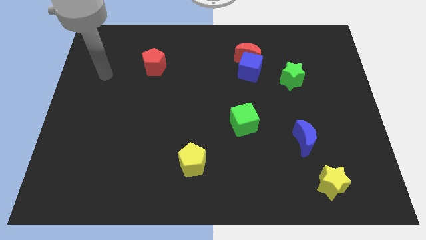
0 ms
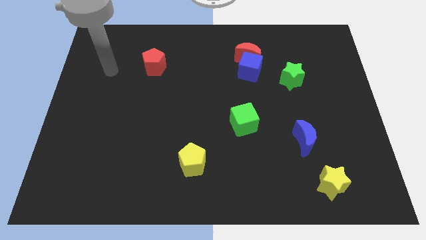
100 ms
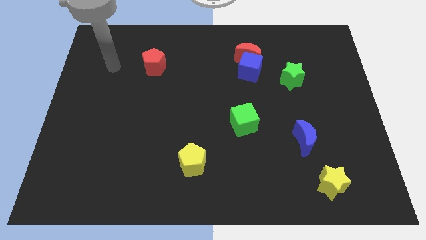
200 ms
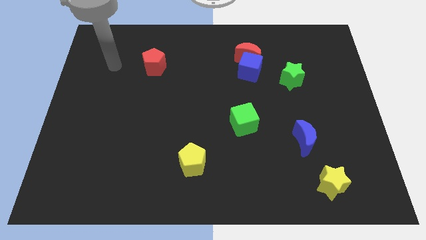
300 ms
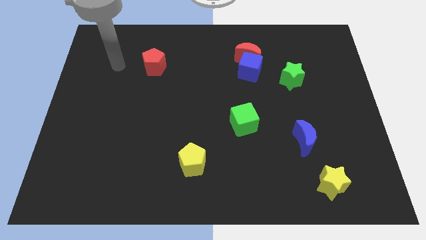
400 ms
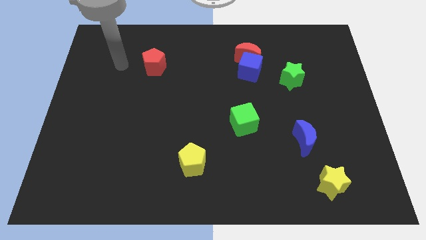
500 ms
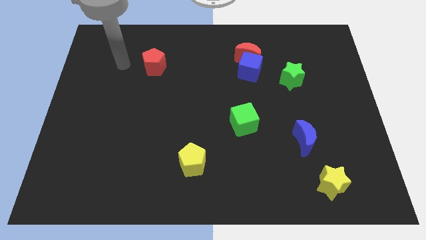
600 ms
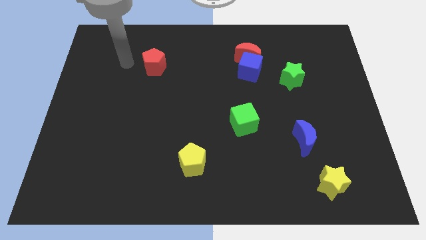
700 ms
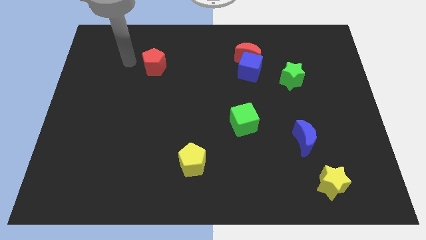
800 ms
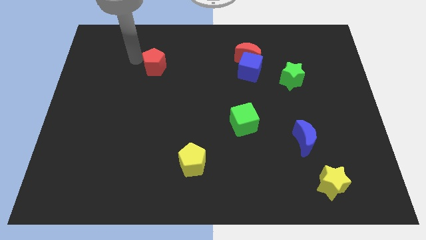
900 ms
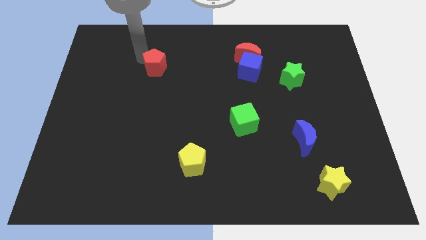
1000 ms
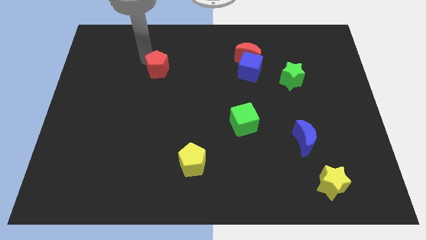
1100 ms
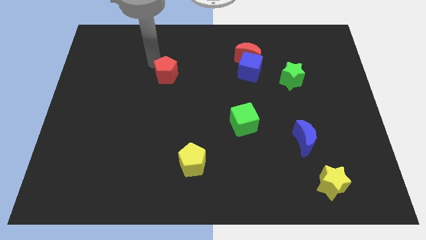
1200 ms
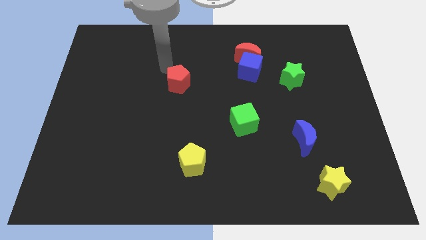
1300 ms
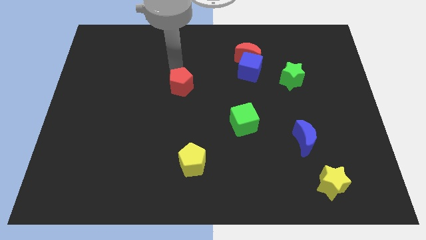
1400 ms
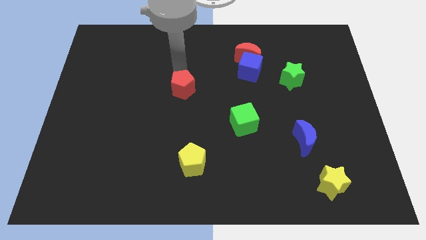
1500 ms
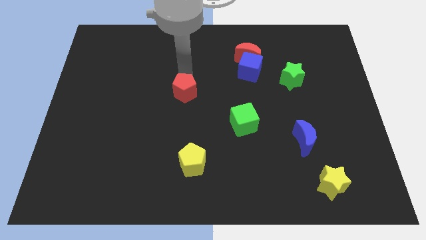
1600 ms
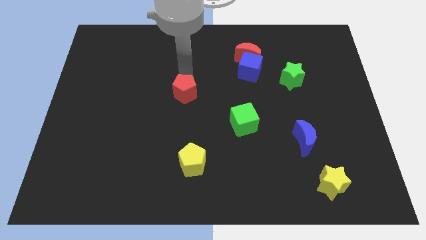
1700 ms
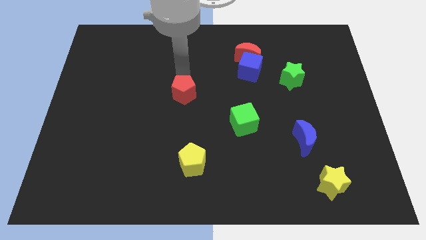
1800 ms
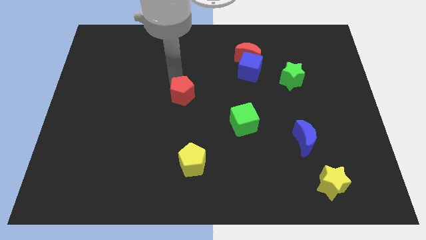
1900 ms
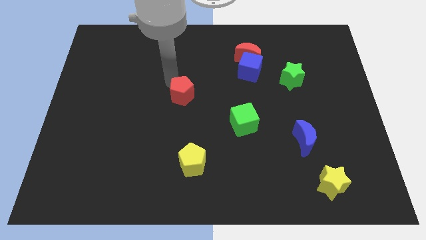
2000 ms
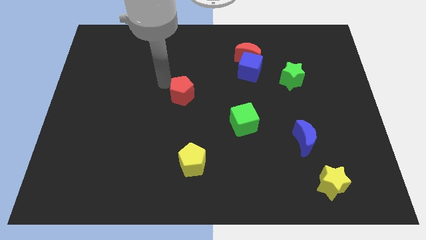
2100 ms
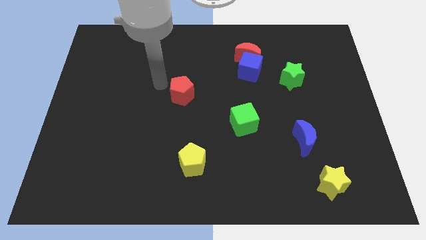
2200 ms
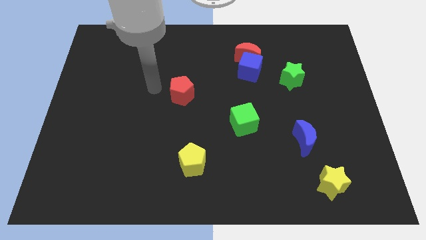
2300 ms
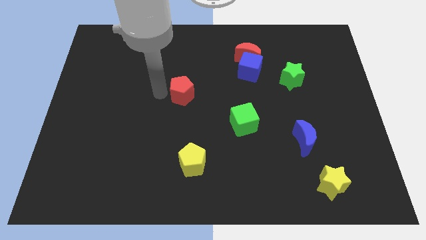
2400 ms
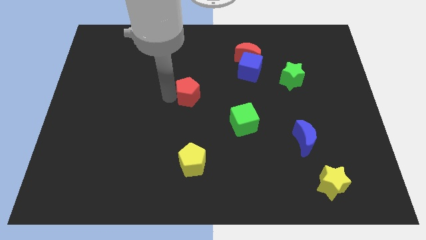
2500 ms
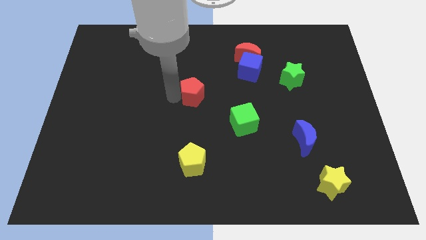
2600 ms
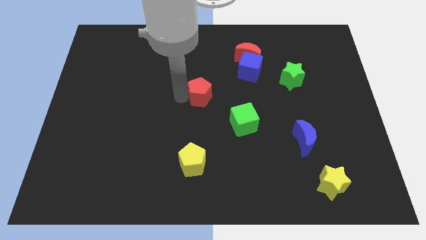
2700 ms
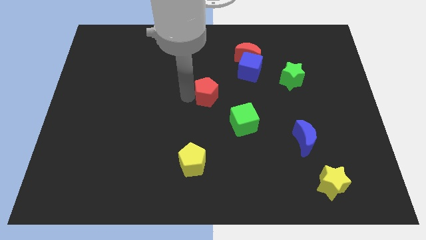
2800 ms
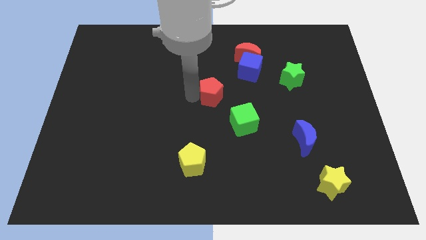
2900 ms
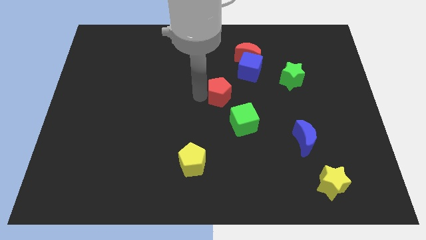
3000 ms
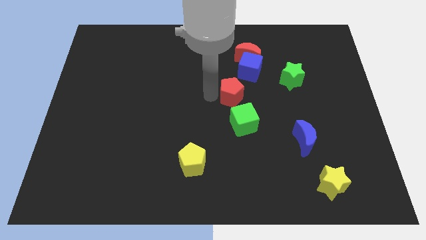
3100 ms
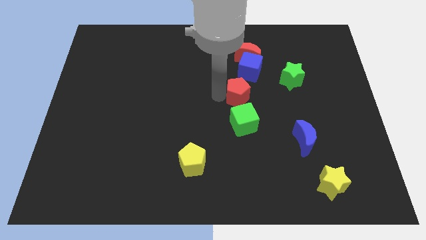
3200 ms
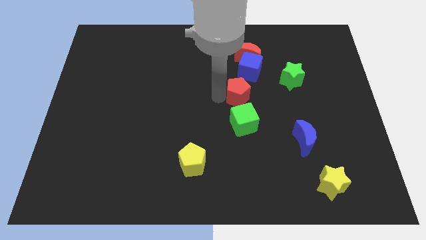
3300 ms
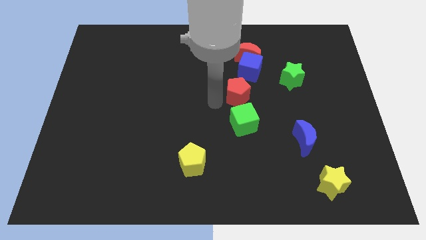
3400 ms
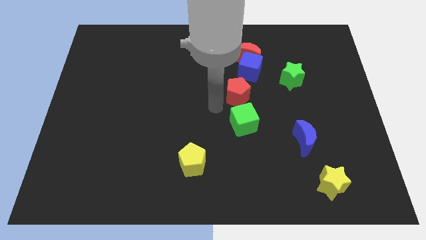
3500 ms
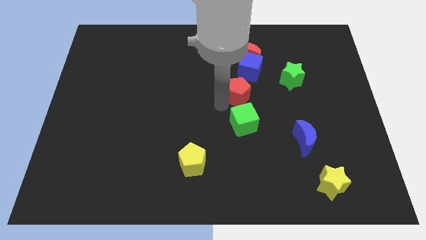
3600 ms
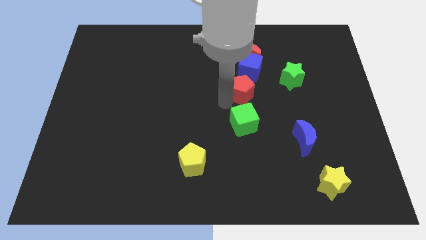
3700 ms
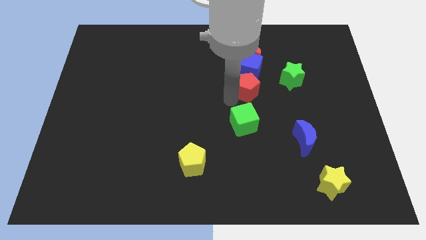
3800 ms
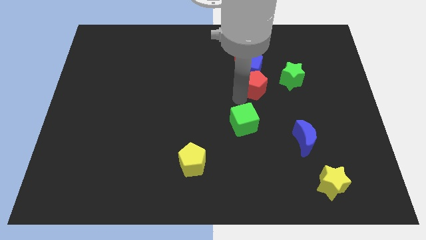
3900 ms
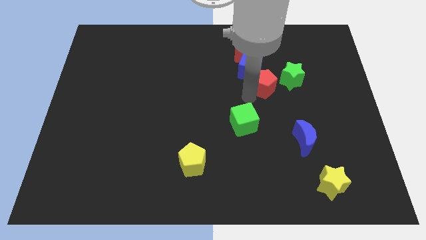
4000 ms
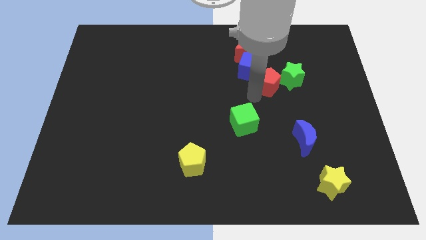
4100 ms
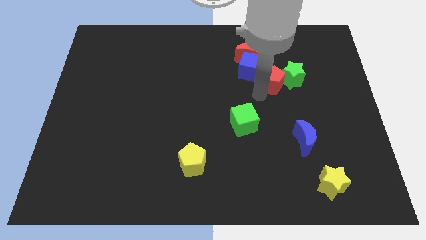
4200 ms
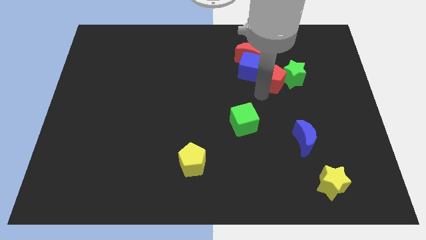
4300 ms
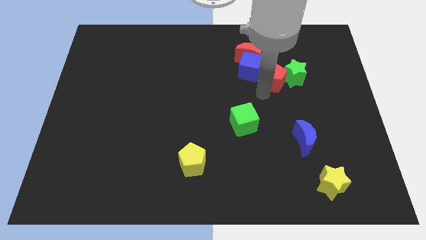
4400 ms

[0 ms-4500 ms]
put the red pentagon close to the green star

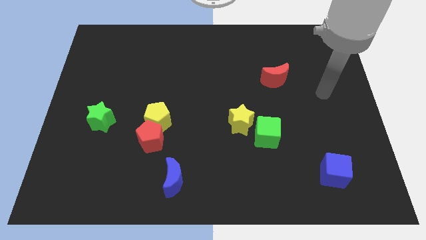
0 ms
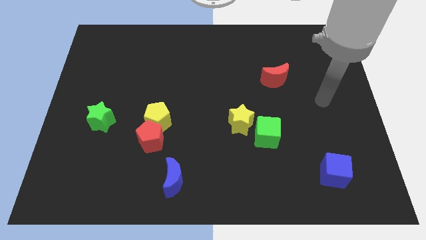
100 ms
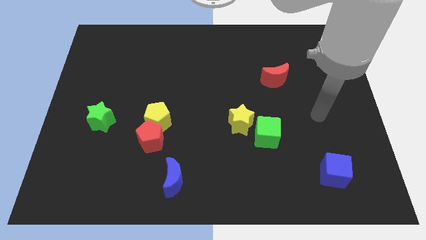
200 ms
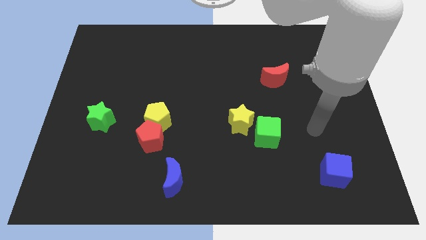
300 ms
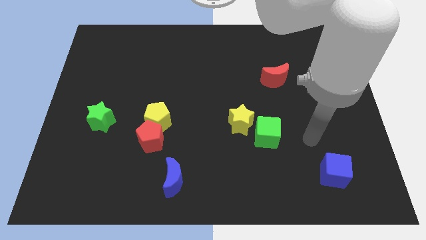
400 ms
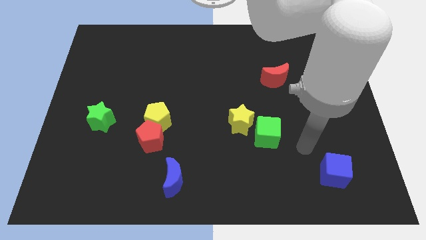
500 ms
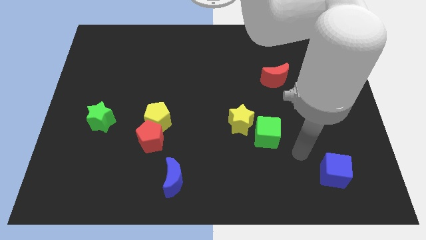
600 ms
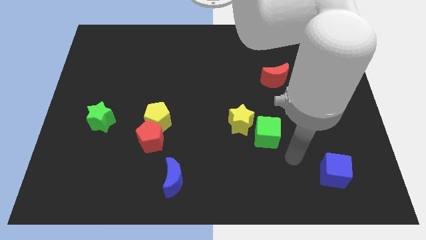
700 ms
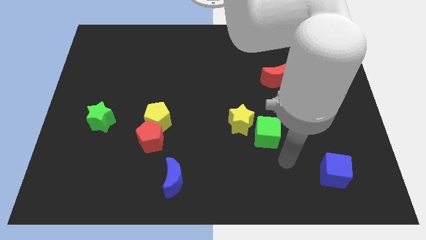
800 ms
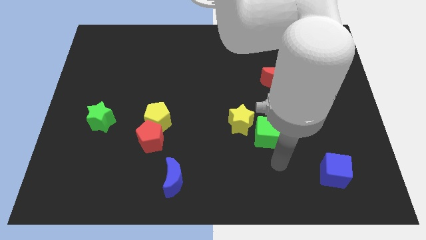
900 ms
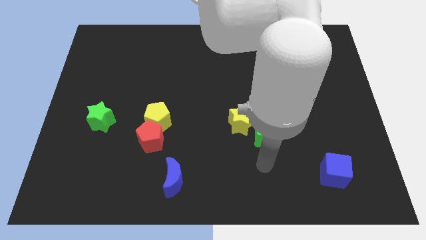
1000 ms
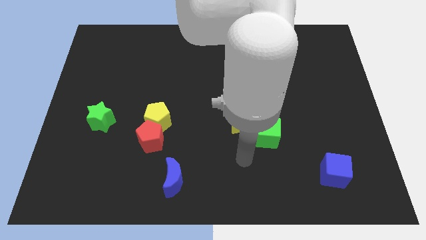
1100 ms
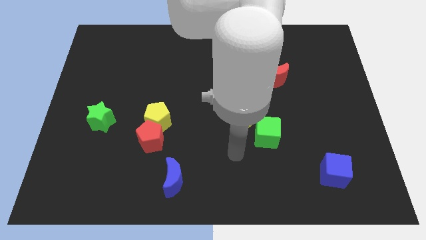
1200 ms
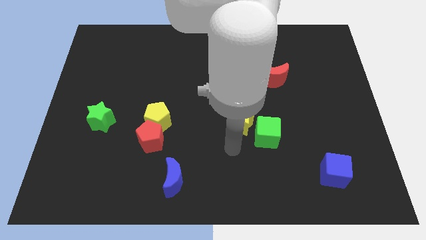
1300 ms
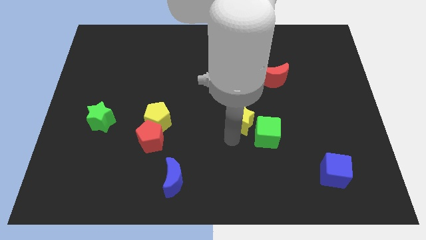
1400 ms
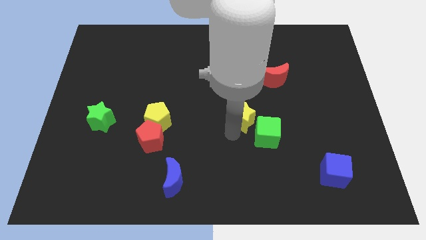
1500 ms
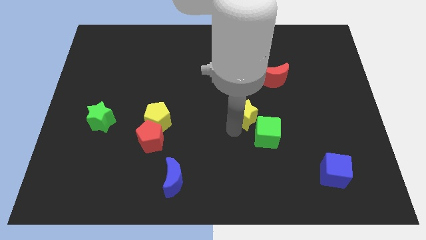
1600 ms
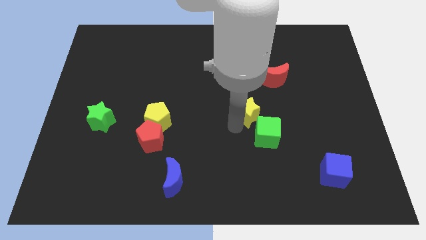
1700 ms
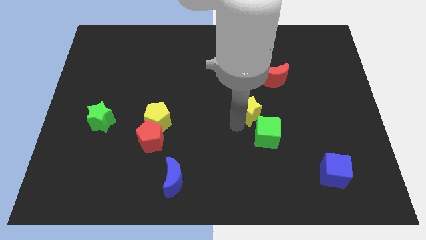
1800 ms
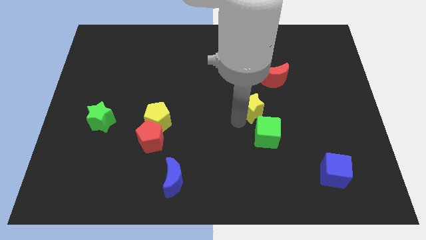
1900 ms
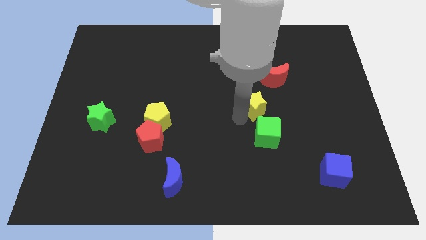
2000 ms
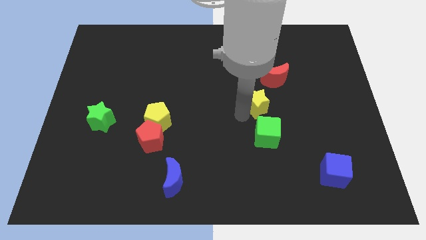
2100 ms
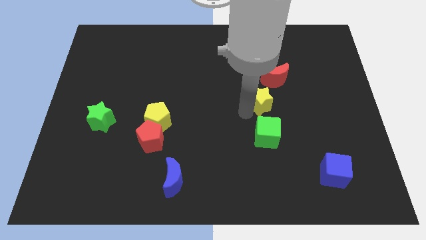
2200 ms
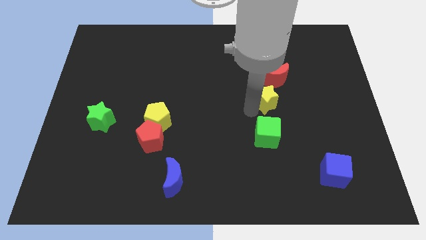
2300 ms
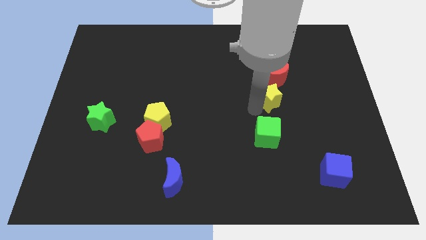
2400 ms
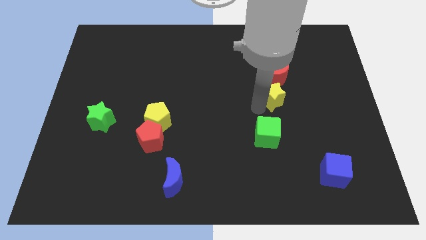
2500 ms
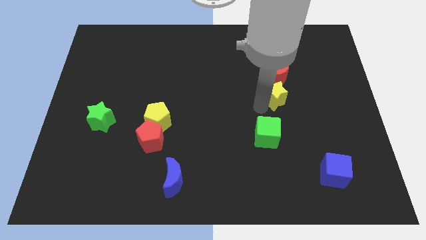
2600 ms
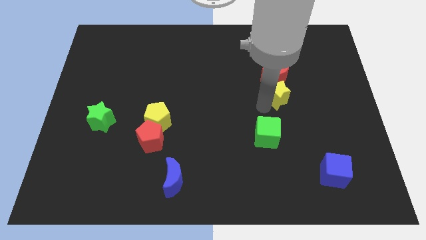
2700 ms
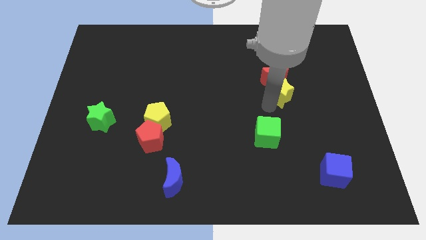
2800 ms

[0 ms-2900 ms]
put the yellow star next to the red moon

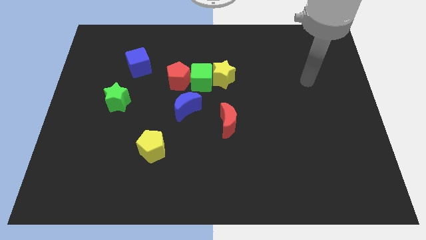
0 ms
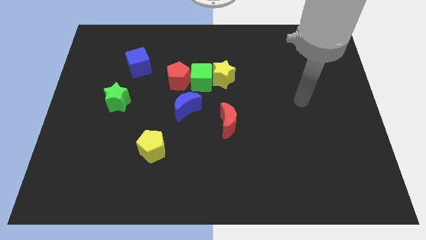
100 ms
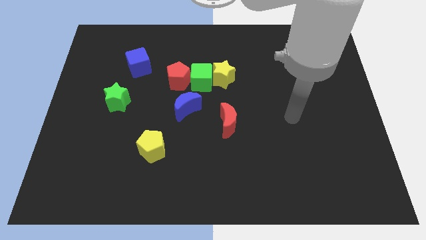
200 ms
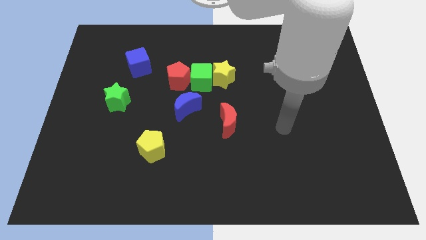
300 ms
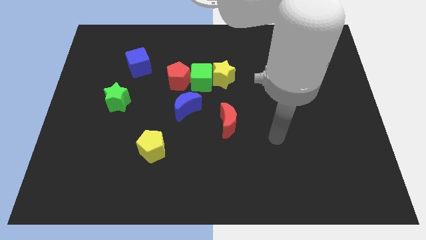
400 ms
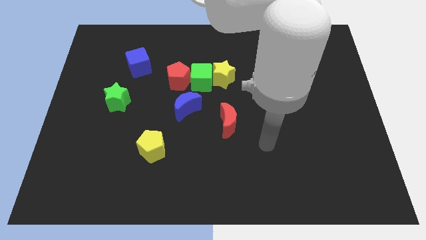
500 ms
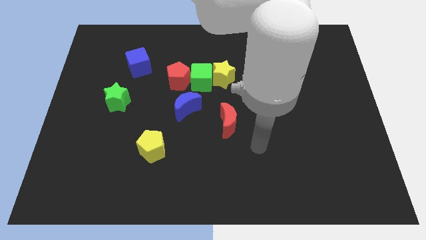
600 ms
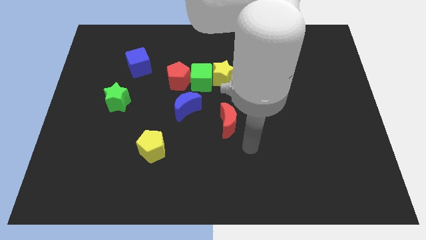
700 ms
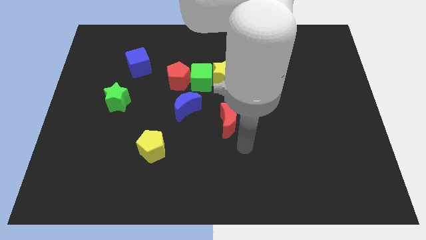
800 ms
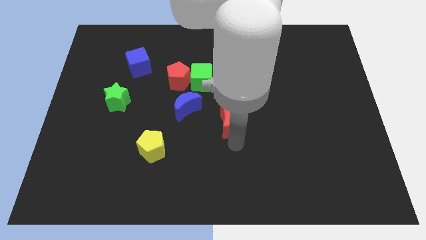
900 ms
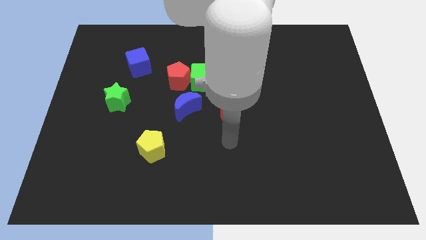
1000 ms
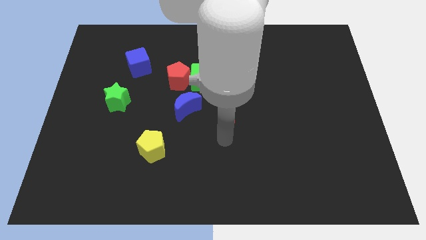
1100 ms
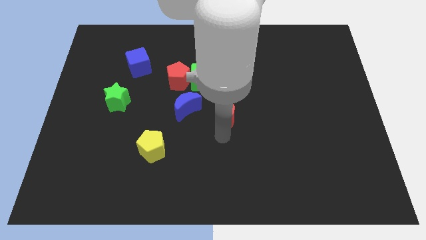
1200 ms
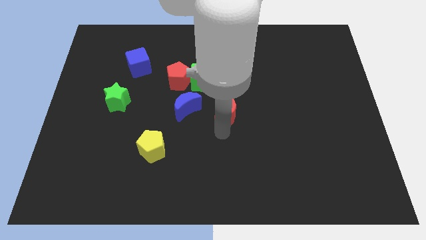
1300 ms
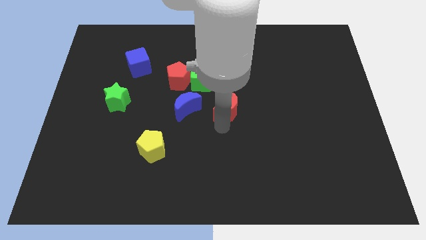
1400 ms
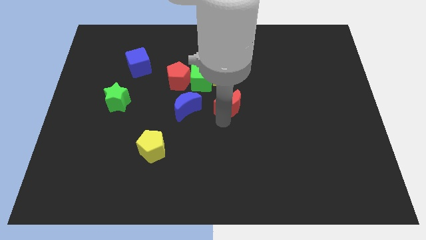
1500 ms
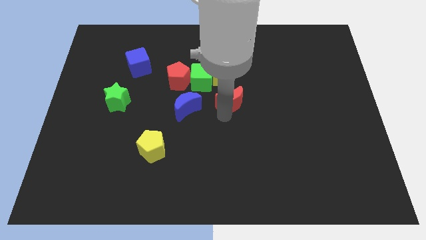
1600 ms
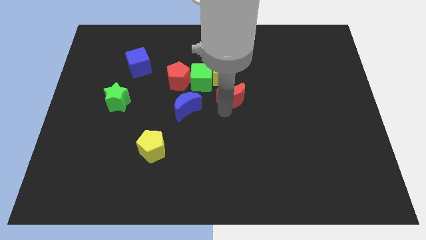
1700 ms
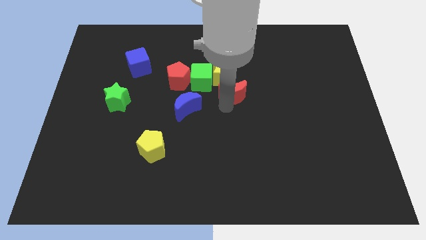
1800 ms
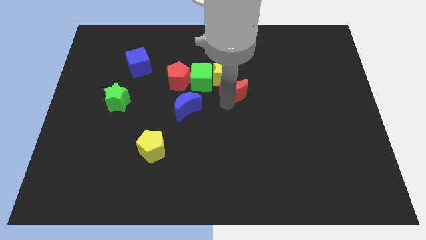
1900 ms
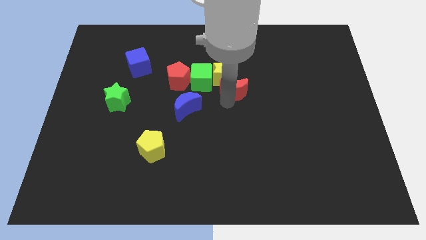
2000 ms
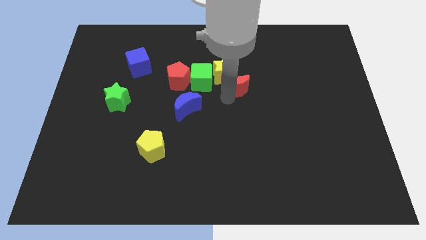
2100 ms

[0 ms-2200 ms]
move the red moon close to the yellow star
